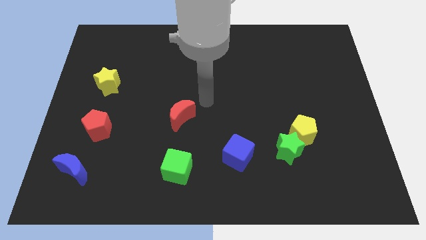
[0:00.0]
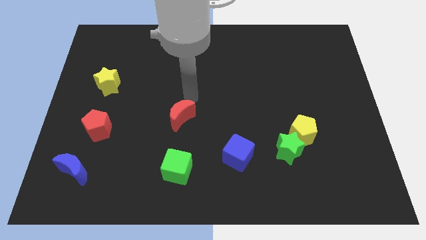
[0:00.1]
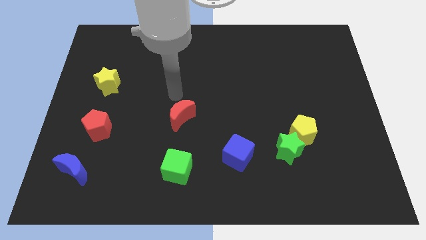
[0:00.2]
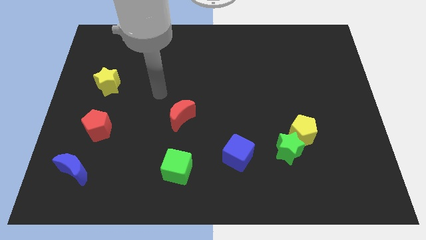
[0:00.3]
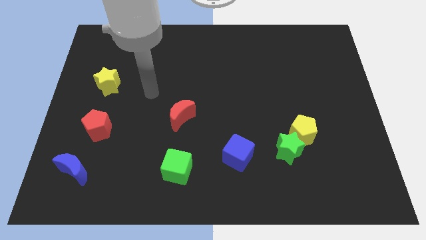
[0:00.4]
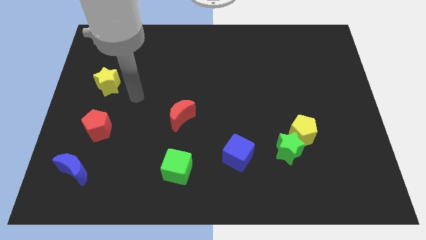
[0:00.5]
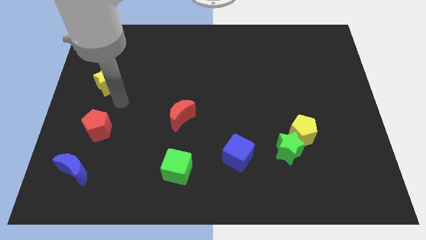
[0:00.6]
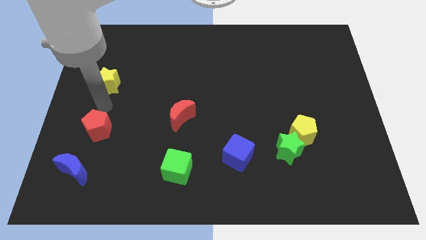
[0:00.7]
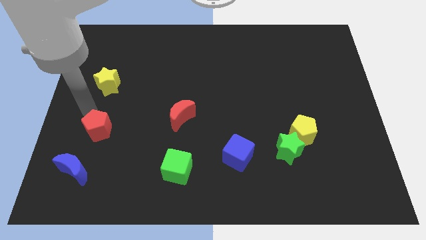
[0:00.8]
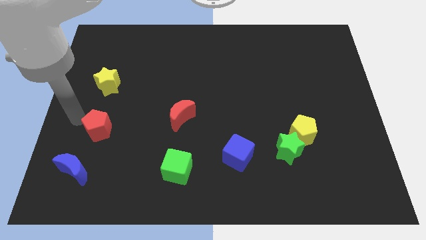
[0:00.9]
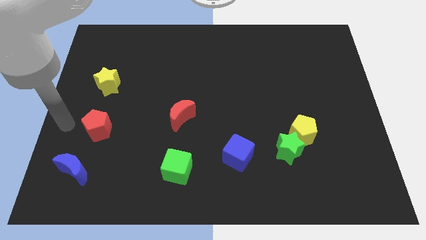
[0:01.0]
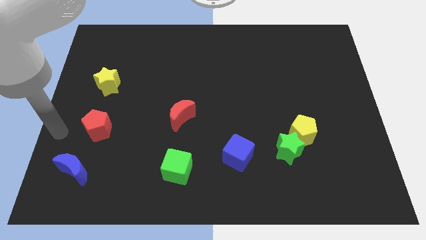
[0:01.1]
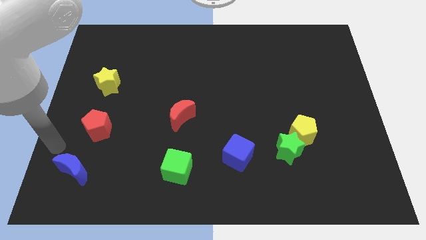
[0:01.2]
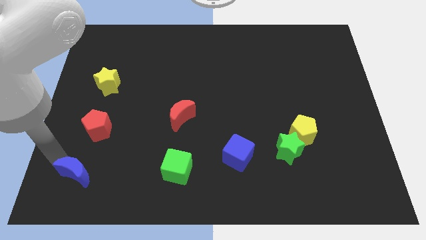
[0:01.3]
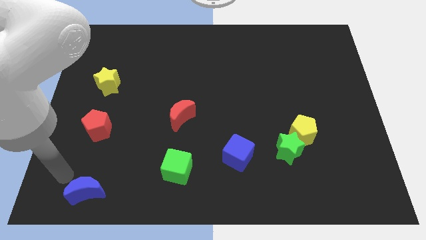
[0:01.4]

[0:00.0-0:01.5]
push the blue moon towards downside of the board

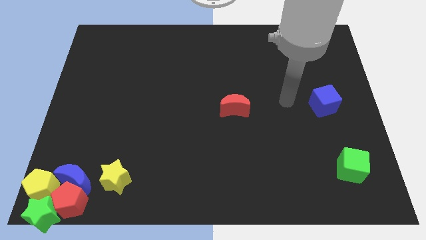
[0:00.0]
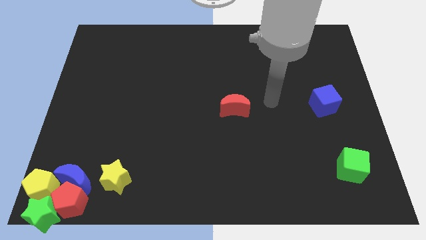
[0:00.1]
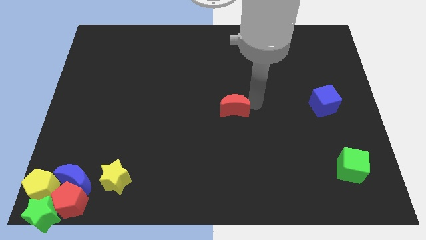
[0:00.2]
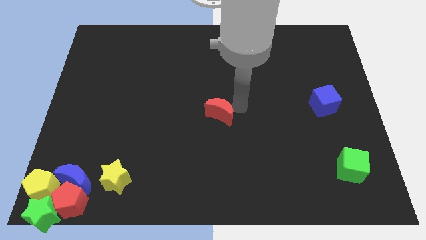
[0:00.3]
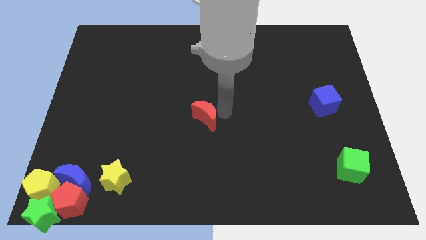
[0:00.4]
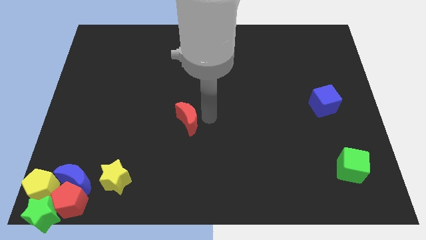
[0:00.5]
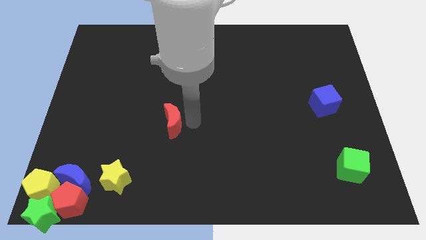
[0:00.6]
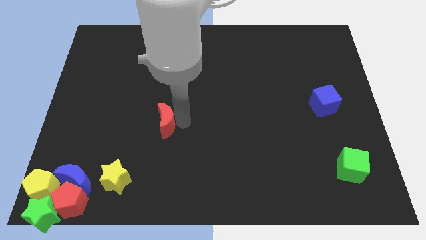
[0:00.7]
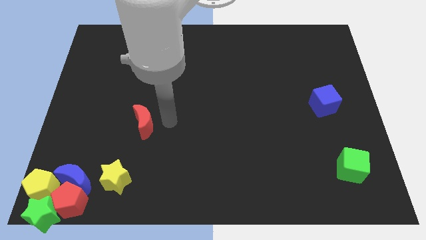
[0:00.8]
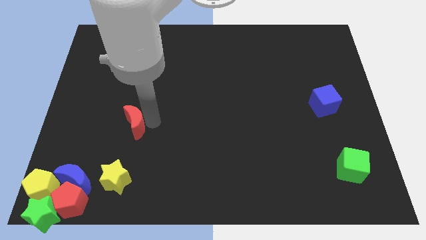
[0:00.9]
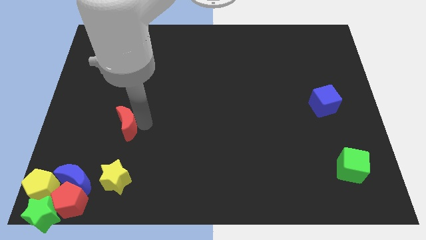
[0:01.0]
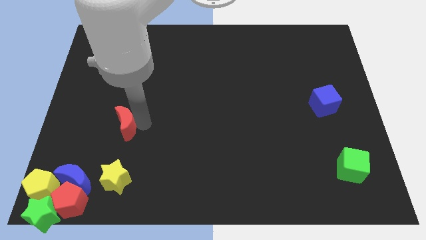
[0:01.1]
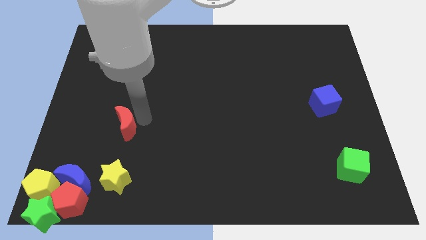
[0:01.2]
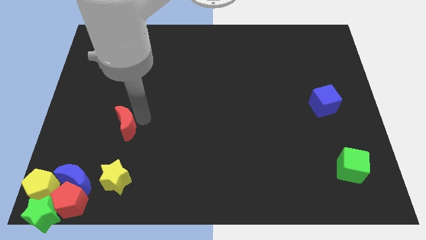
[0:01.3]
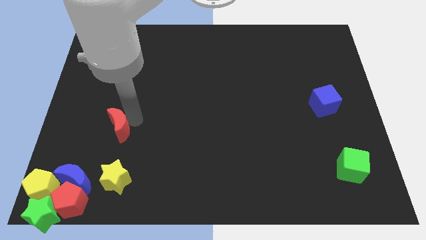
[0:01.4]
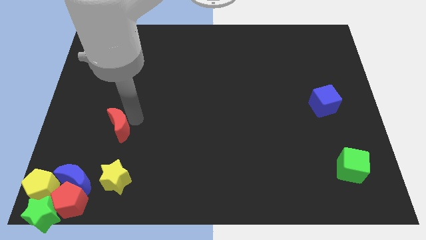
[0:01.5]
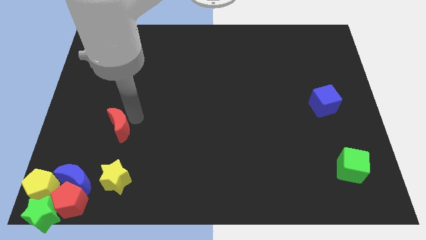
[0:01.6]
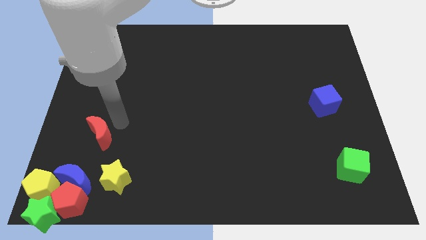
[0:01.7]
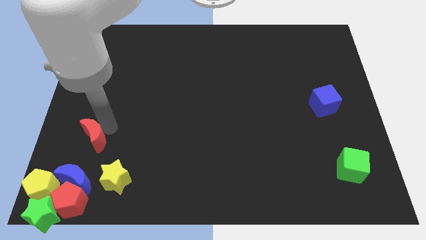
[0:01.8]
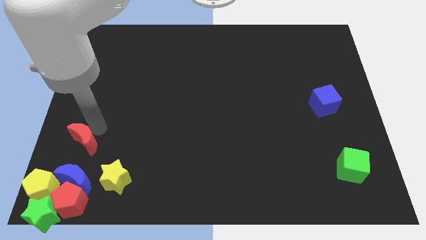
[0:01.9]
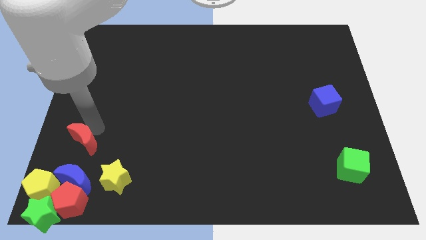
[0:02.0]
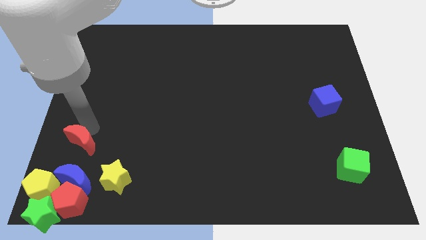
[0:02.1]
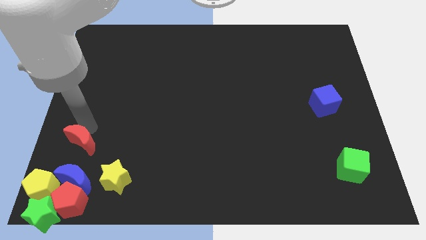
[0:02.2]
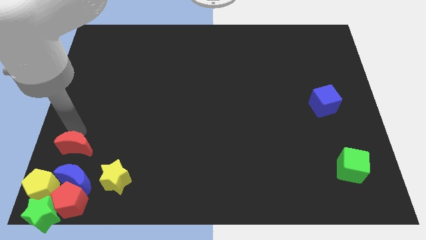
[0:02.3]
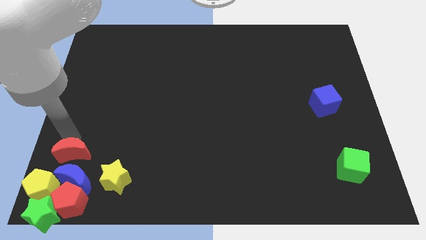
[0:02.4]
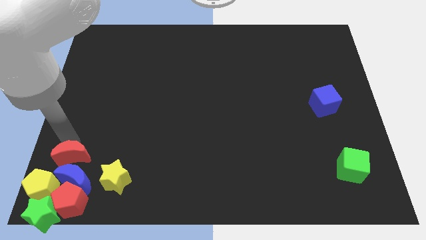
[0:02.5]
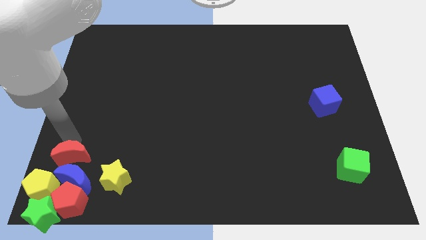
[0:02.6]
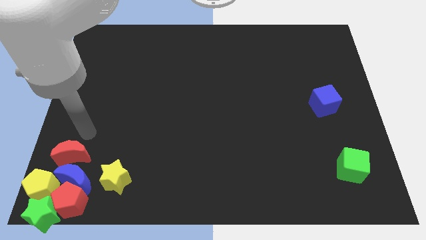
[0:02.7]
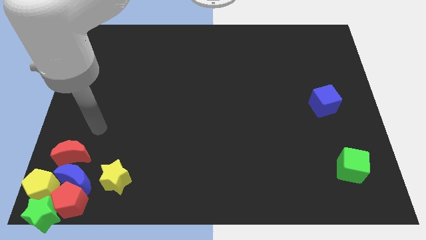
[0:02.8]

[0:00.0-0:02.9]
place the red moon diagonally top left to yellow star

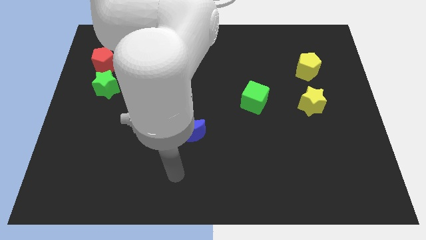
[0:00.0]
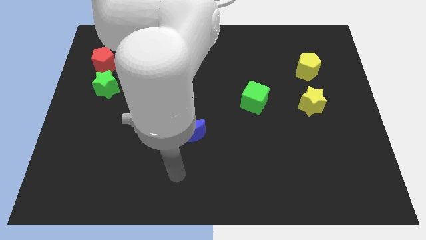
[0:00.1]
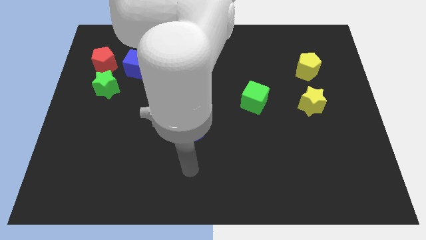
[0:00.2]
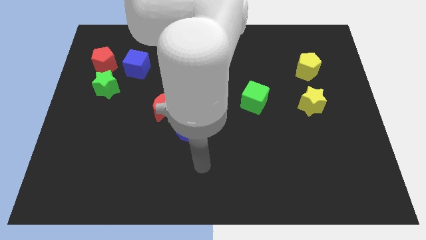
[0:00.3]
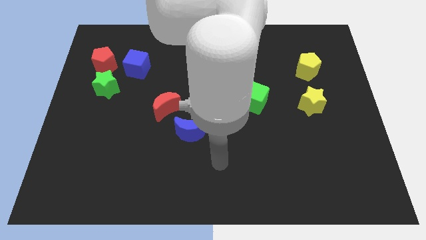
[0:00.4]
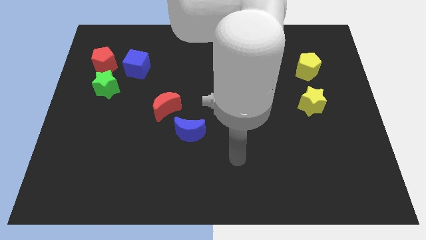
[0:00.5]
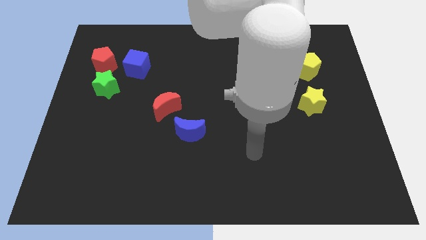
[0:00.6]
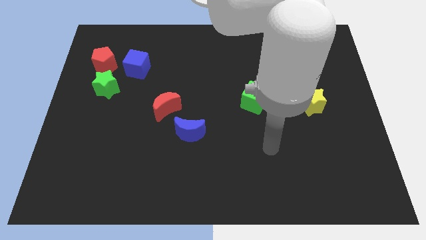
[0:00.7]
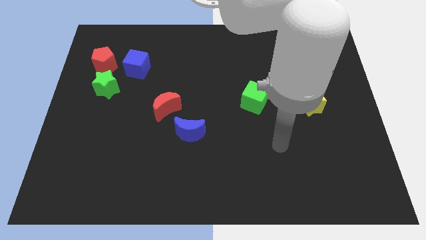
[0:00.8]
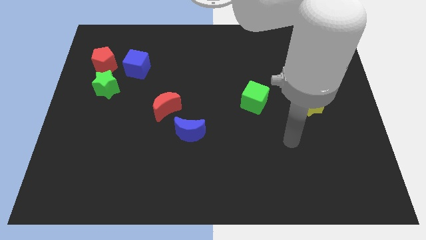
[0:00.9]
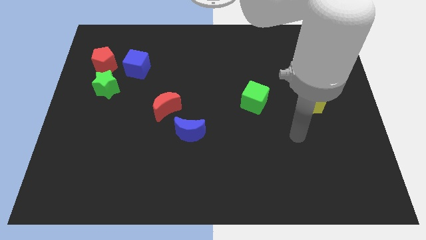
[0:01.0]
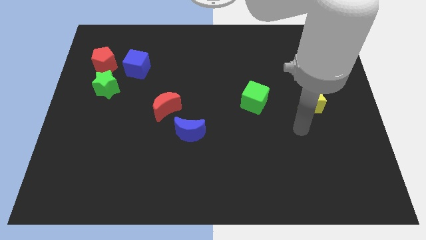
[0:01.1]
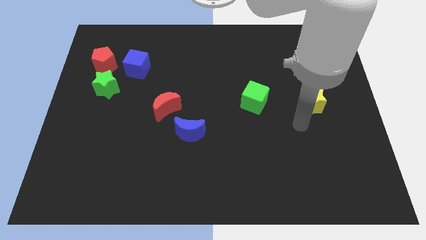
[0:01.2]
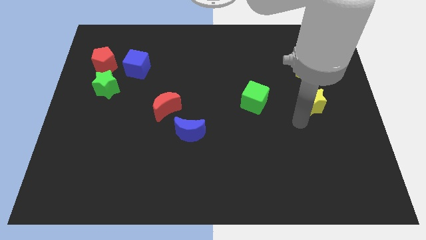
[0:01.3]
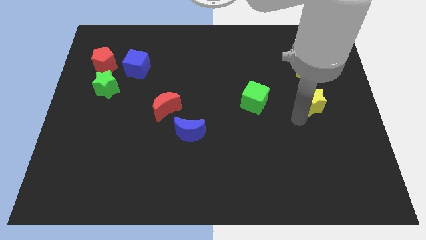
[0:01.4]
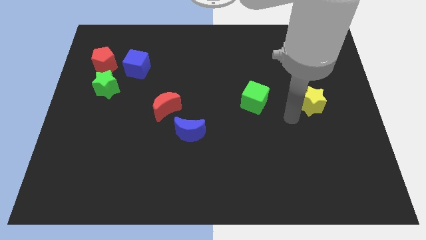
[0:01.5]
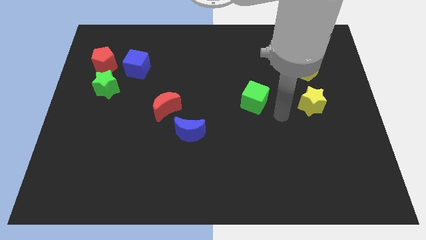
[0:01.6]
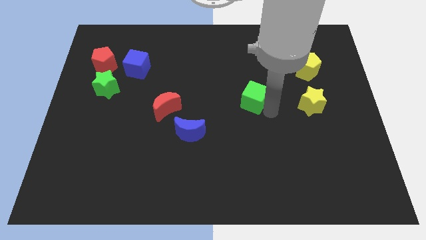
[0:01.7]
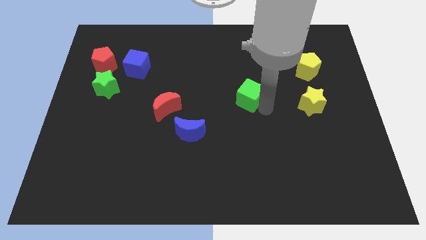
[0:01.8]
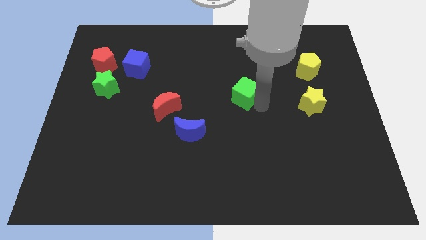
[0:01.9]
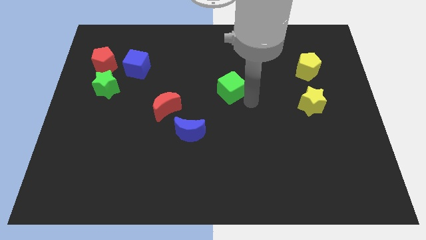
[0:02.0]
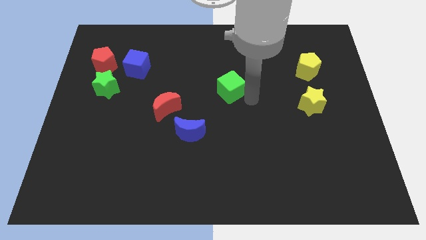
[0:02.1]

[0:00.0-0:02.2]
push the green cube to the left of the board

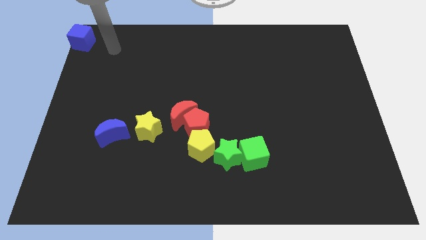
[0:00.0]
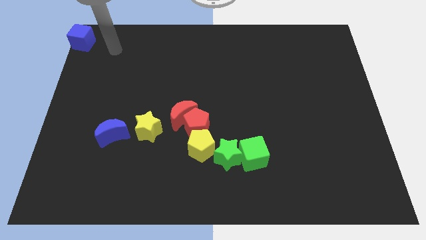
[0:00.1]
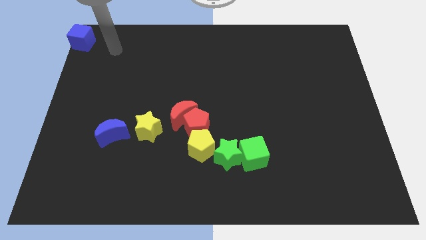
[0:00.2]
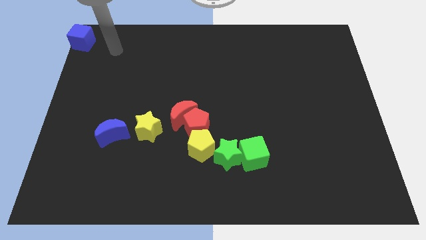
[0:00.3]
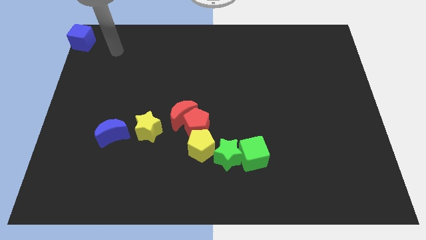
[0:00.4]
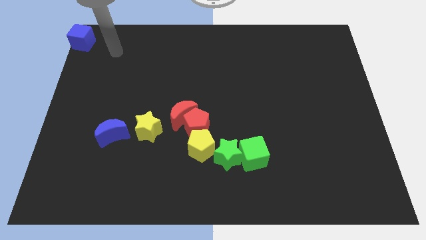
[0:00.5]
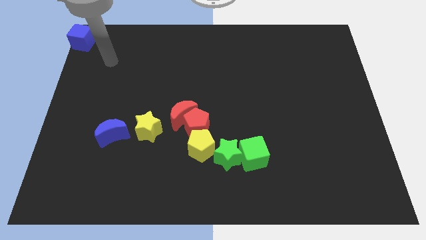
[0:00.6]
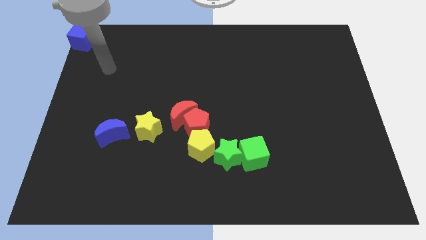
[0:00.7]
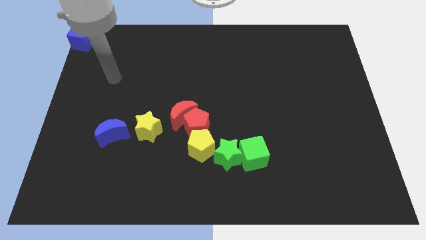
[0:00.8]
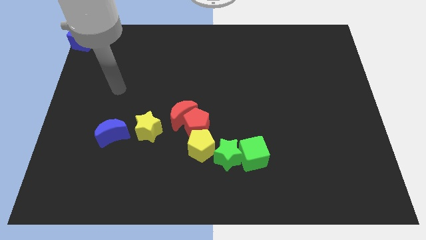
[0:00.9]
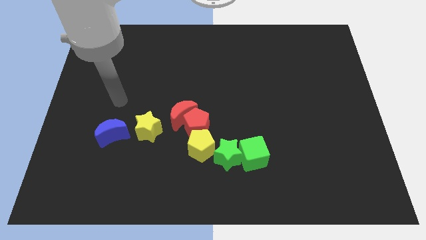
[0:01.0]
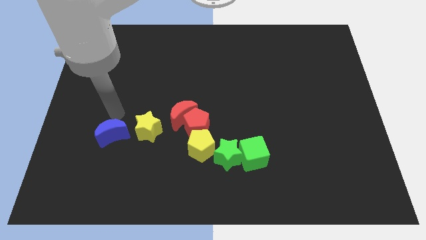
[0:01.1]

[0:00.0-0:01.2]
move your arm towards down

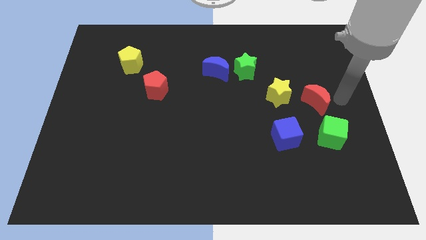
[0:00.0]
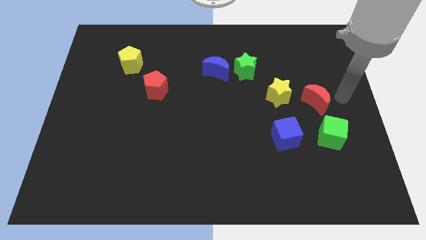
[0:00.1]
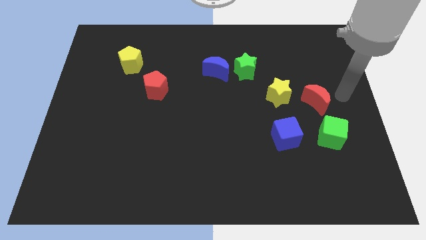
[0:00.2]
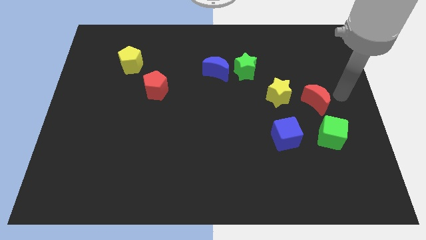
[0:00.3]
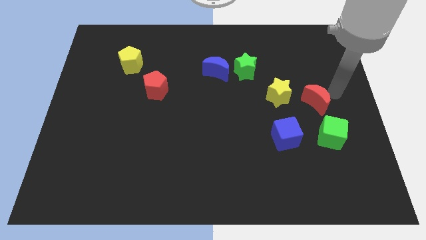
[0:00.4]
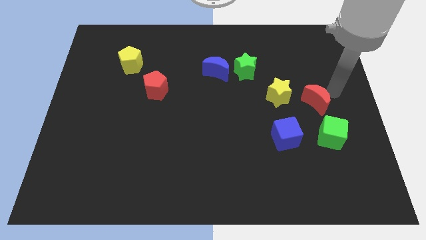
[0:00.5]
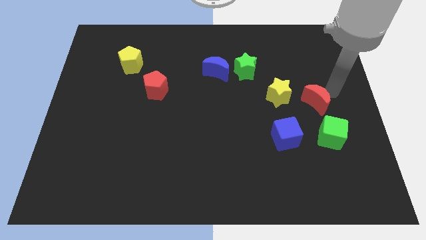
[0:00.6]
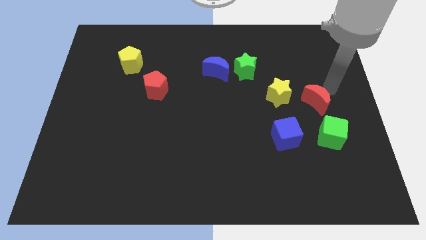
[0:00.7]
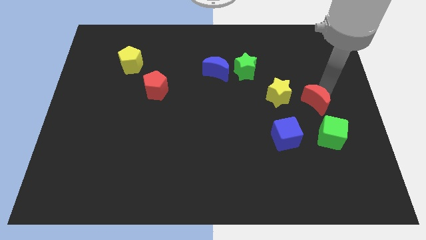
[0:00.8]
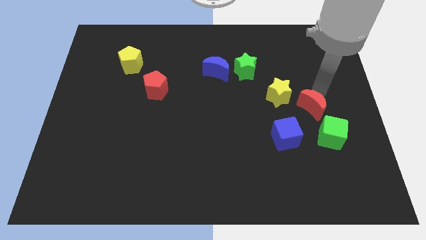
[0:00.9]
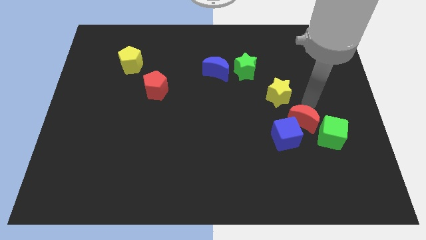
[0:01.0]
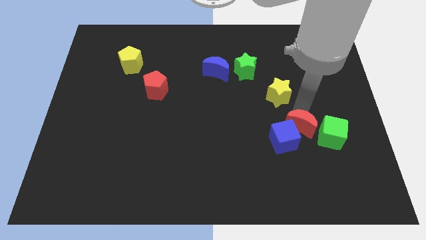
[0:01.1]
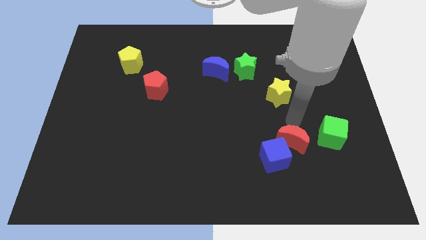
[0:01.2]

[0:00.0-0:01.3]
push red moon into blue cube
